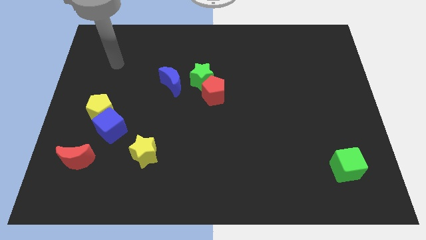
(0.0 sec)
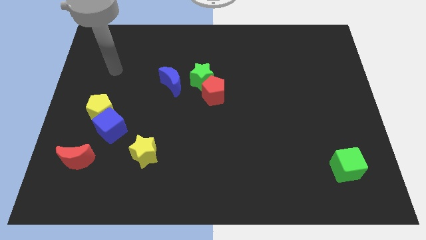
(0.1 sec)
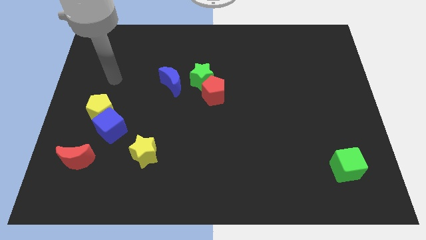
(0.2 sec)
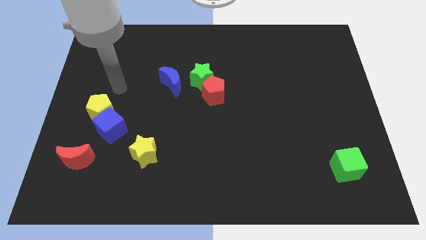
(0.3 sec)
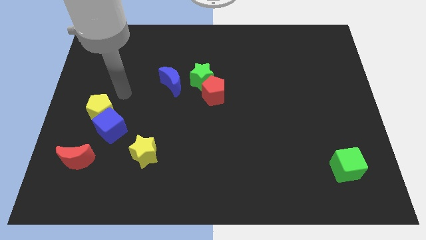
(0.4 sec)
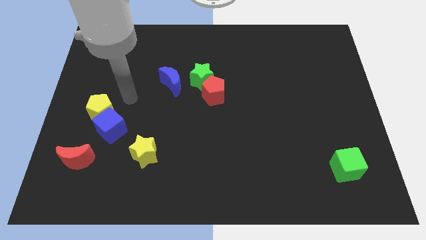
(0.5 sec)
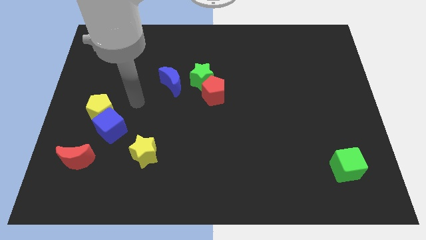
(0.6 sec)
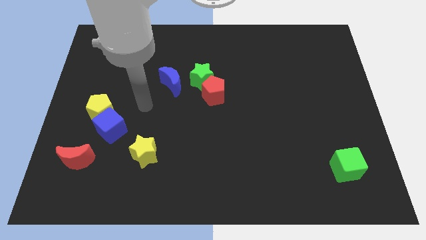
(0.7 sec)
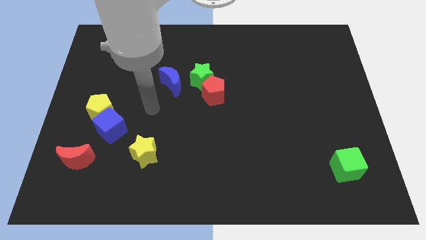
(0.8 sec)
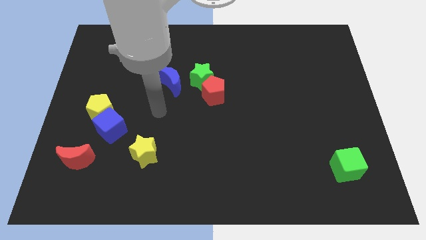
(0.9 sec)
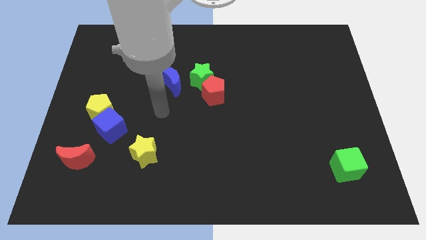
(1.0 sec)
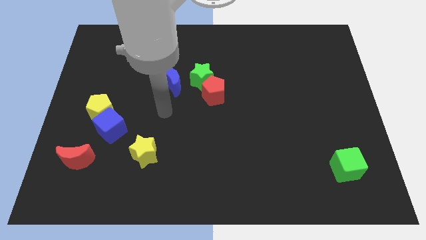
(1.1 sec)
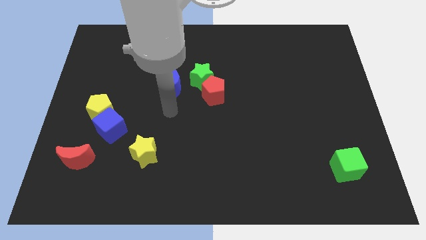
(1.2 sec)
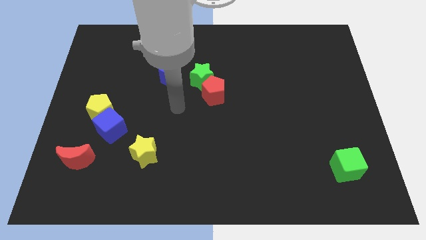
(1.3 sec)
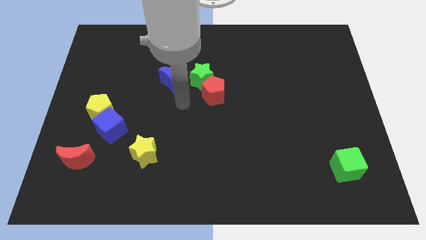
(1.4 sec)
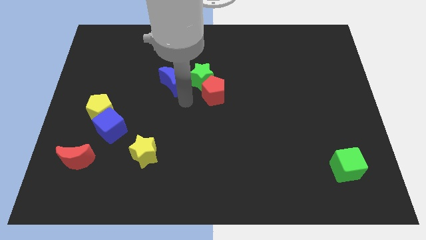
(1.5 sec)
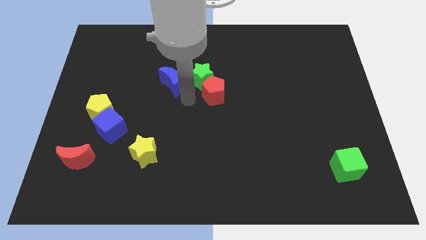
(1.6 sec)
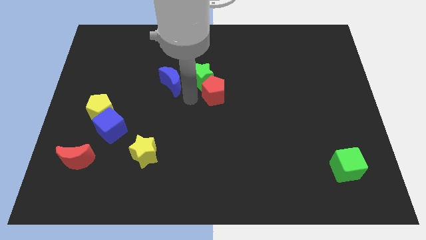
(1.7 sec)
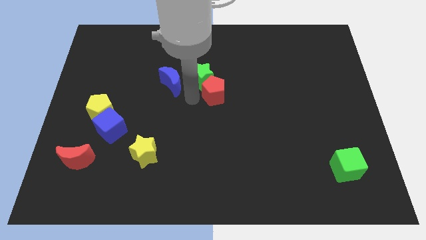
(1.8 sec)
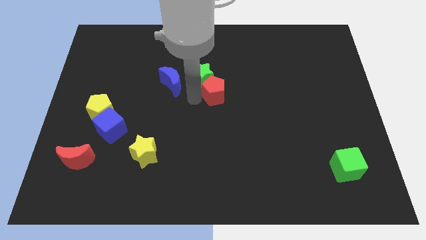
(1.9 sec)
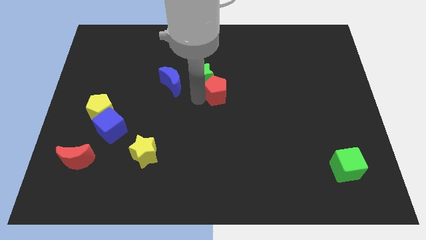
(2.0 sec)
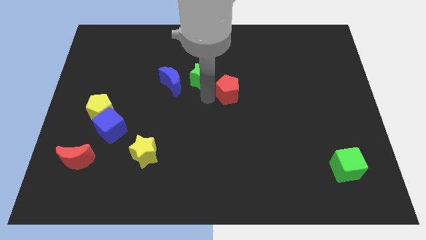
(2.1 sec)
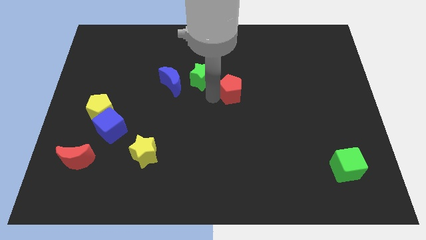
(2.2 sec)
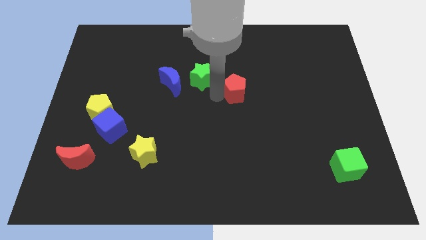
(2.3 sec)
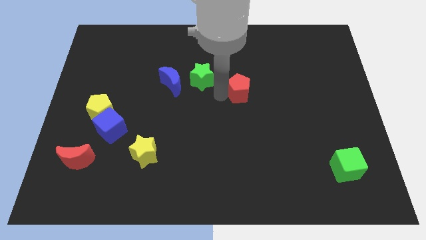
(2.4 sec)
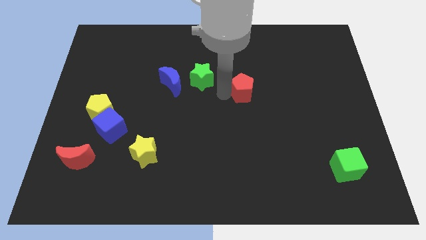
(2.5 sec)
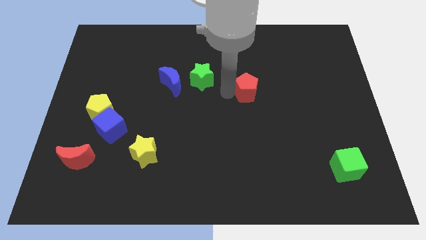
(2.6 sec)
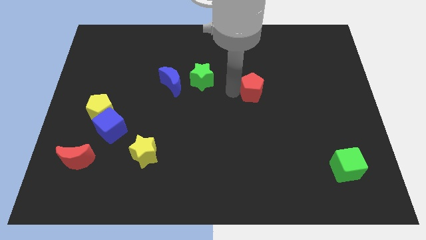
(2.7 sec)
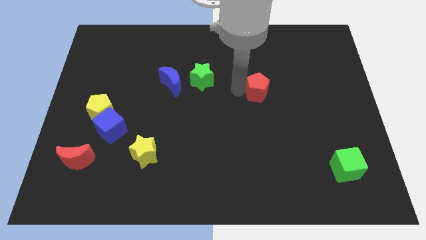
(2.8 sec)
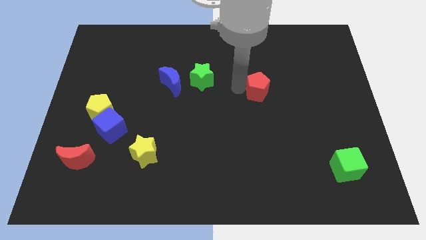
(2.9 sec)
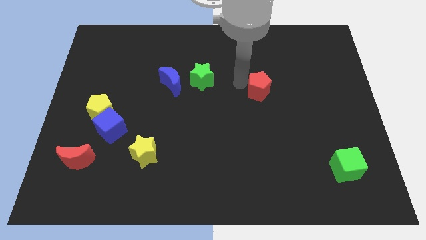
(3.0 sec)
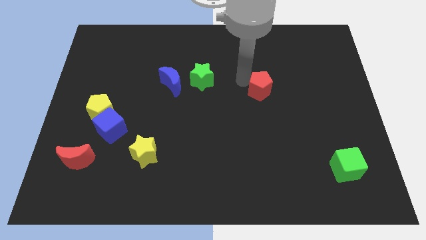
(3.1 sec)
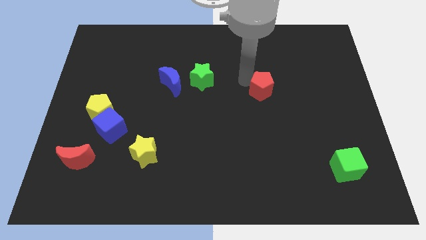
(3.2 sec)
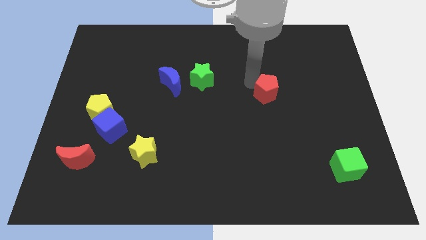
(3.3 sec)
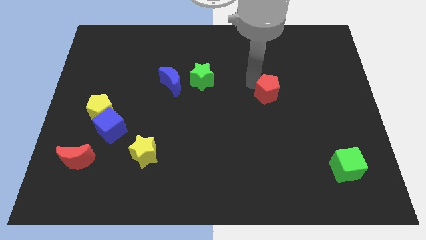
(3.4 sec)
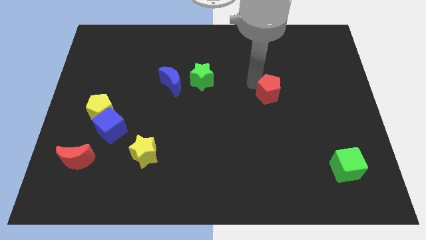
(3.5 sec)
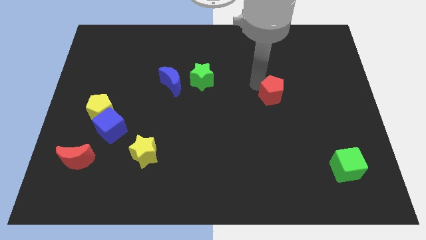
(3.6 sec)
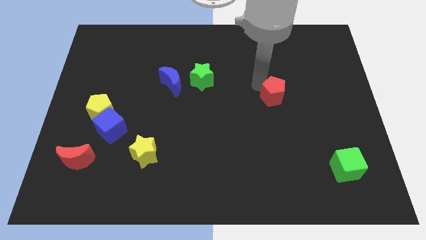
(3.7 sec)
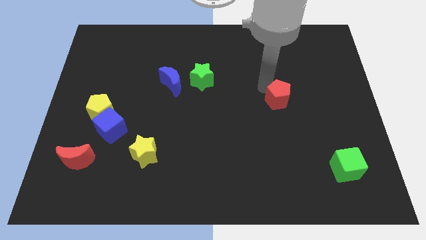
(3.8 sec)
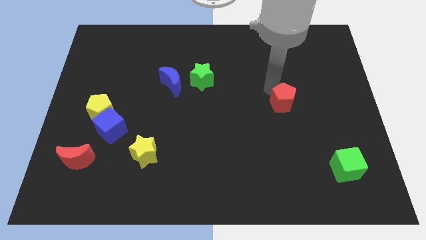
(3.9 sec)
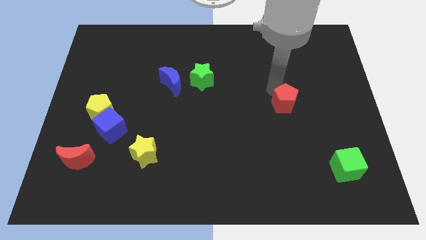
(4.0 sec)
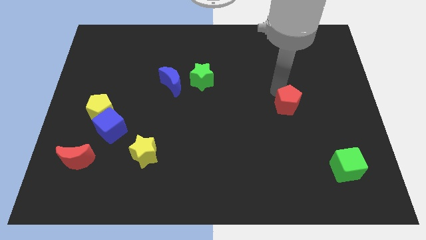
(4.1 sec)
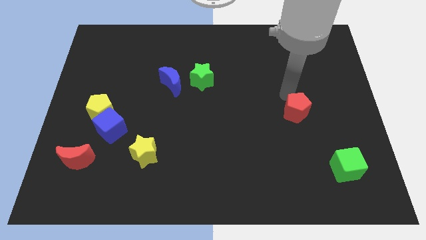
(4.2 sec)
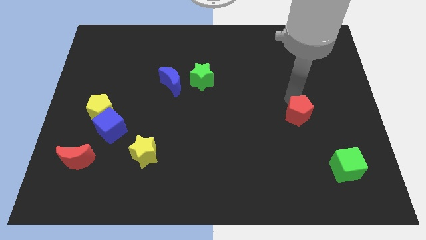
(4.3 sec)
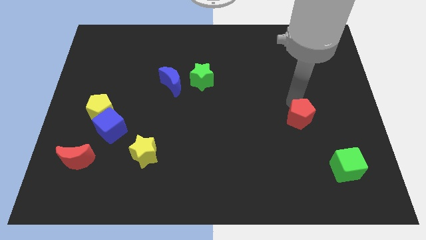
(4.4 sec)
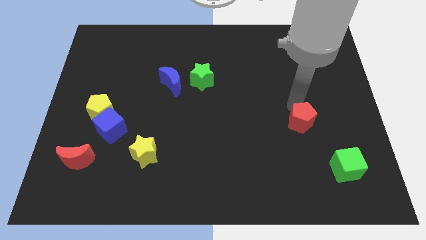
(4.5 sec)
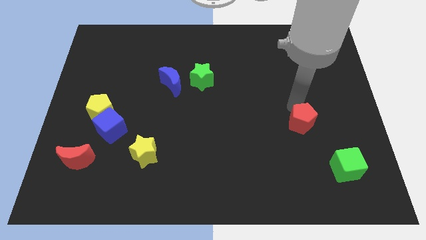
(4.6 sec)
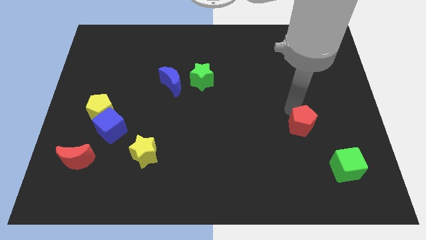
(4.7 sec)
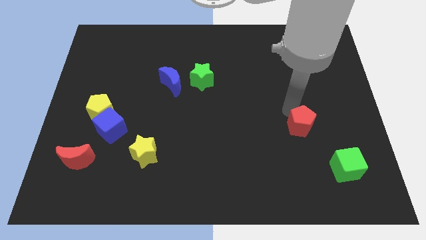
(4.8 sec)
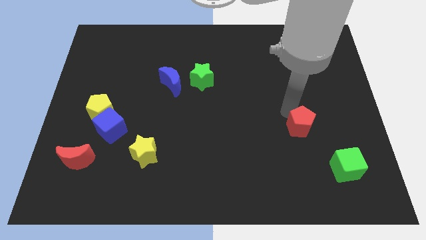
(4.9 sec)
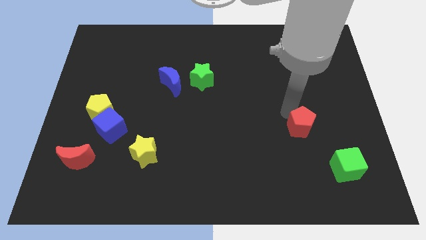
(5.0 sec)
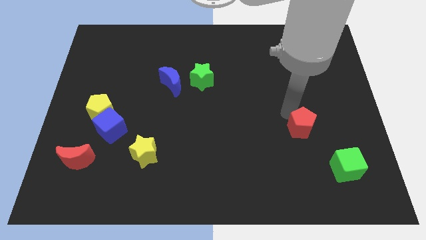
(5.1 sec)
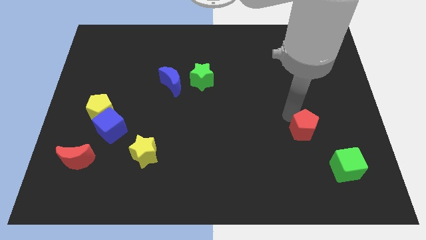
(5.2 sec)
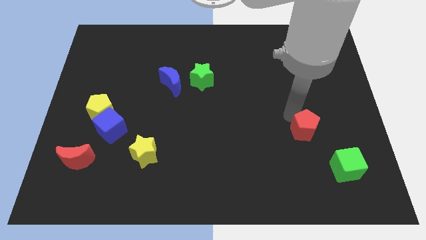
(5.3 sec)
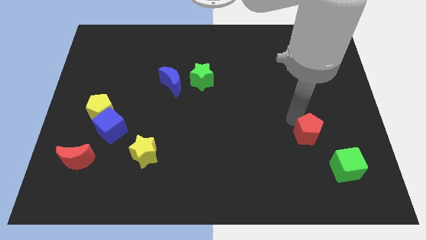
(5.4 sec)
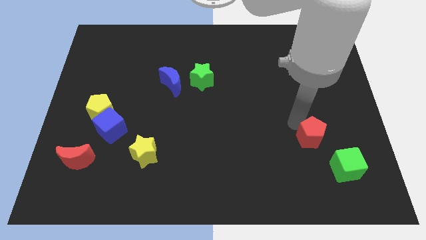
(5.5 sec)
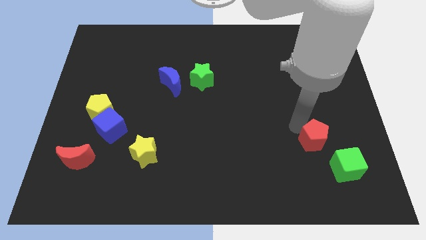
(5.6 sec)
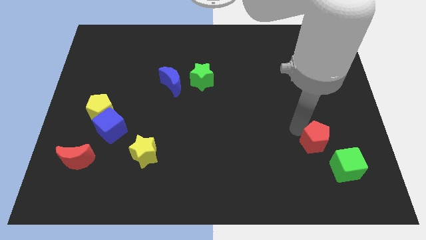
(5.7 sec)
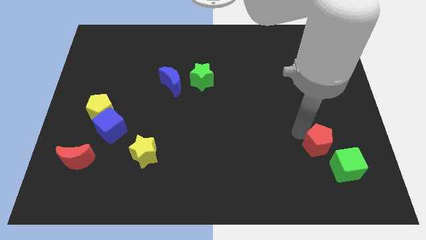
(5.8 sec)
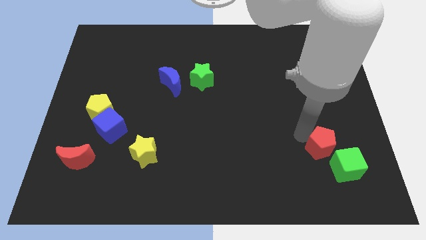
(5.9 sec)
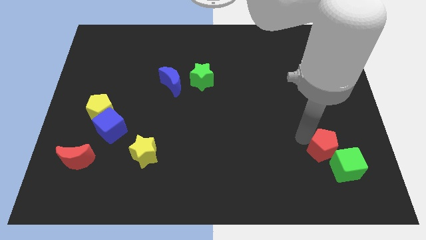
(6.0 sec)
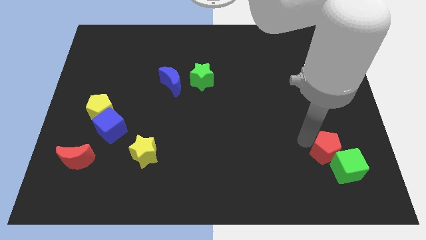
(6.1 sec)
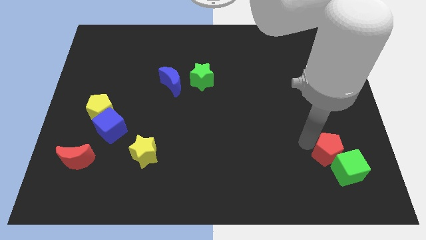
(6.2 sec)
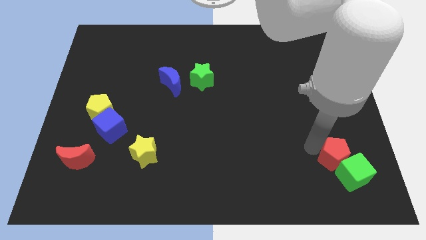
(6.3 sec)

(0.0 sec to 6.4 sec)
push the red pentagon next to the green cube

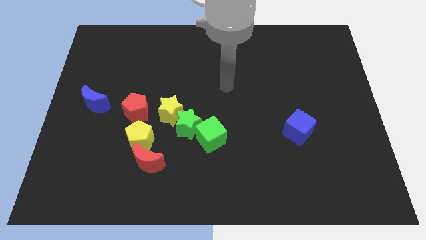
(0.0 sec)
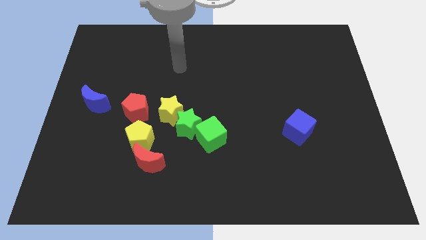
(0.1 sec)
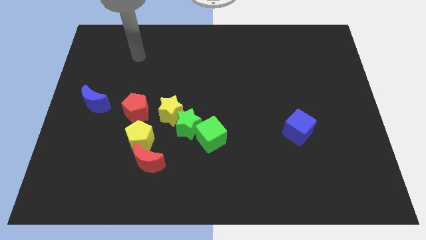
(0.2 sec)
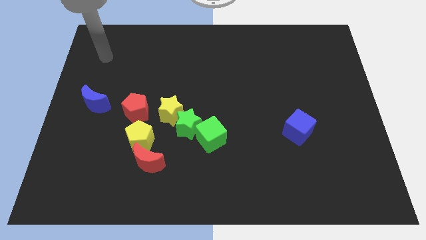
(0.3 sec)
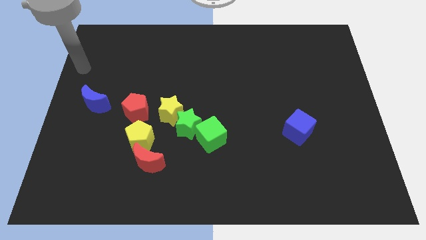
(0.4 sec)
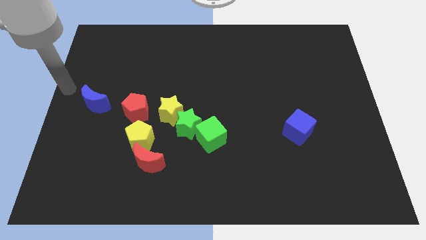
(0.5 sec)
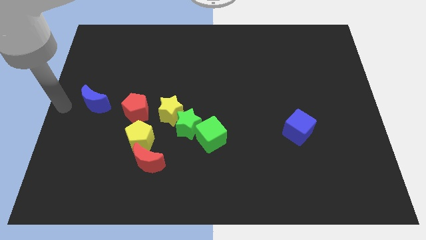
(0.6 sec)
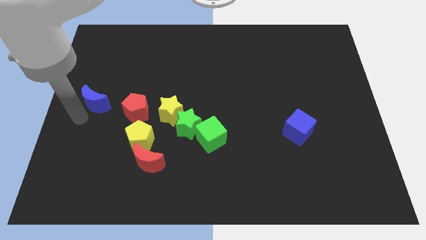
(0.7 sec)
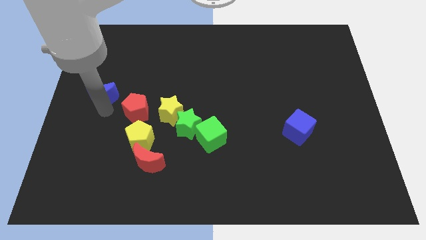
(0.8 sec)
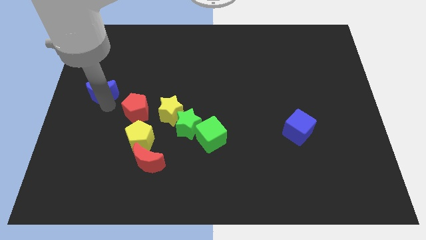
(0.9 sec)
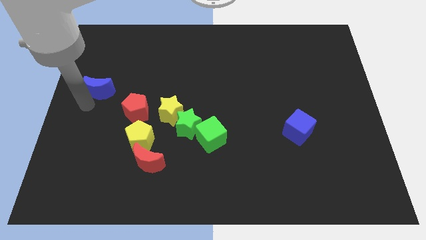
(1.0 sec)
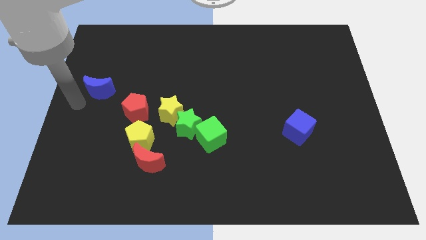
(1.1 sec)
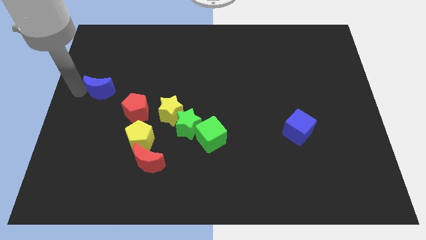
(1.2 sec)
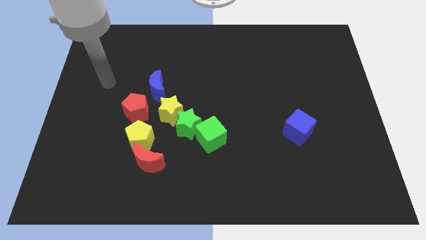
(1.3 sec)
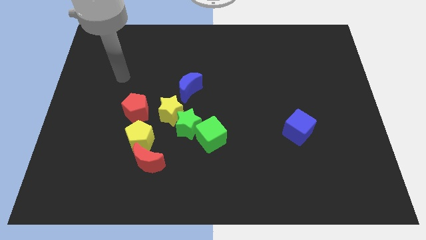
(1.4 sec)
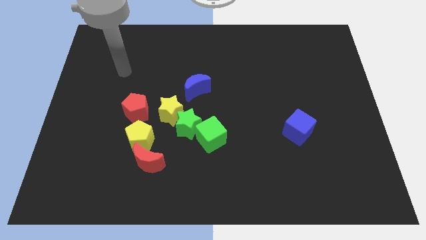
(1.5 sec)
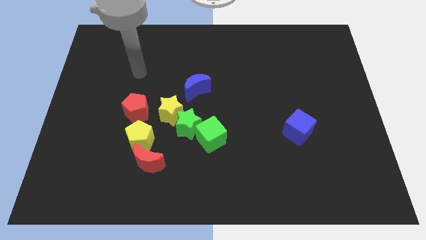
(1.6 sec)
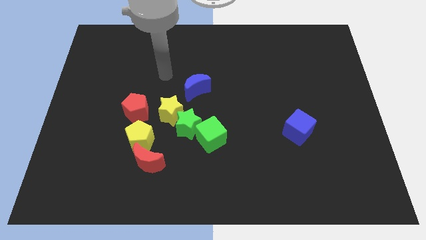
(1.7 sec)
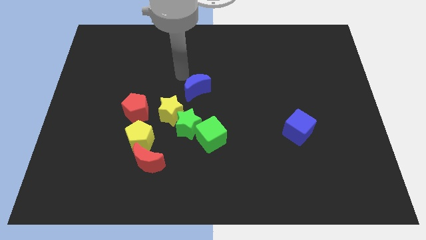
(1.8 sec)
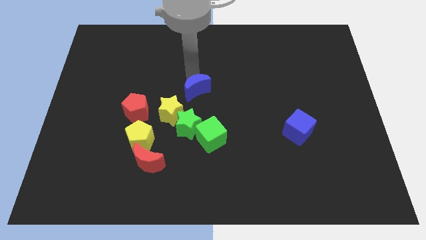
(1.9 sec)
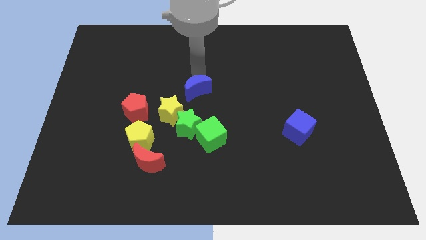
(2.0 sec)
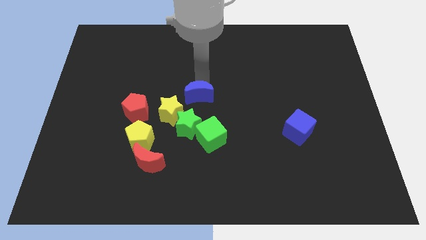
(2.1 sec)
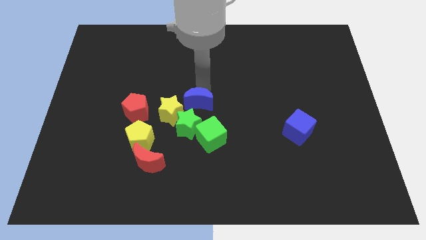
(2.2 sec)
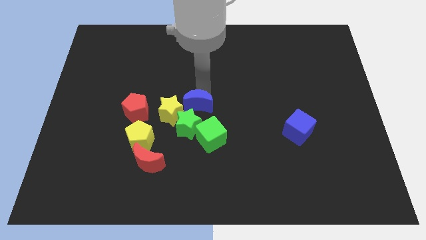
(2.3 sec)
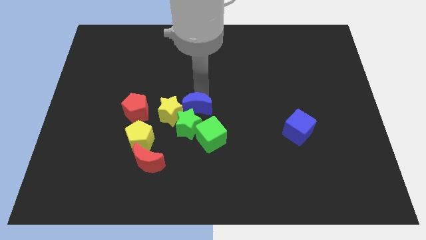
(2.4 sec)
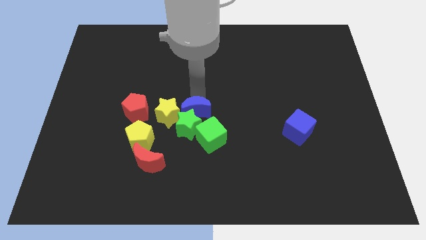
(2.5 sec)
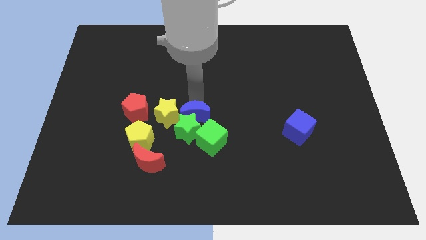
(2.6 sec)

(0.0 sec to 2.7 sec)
slide the blue moon next to the green star
